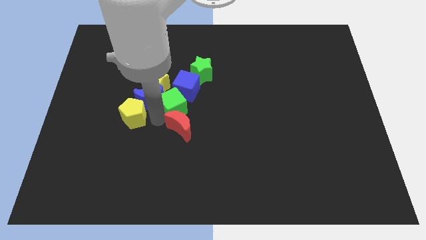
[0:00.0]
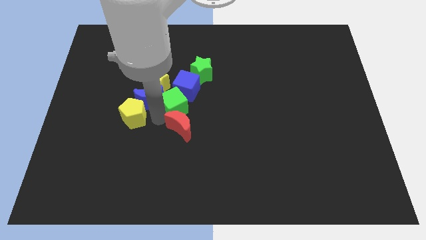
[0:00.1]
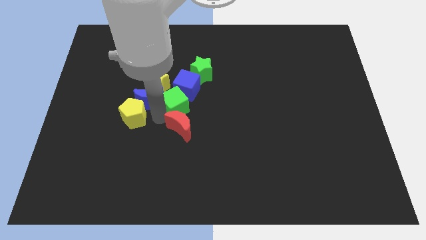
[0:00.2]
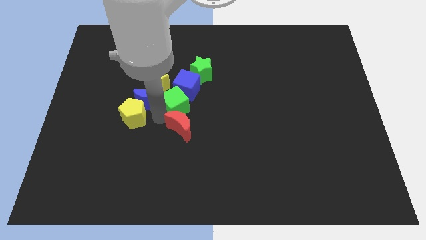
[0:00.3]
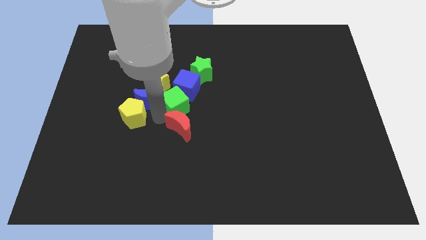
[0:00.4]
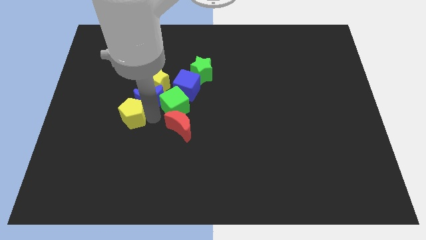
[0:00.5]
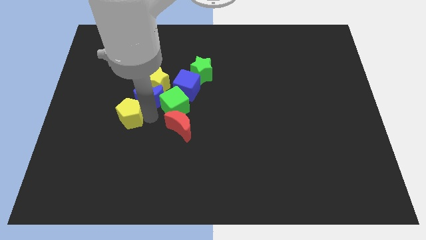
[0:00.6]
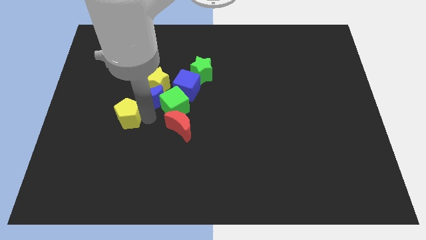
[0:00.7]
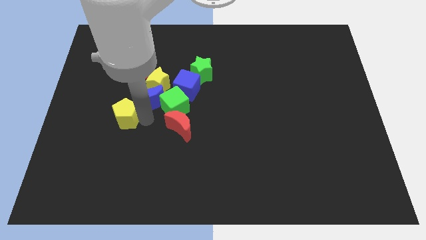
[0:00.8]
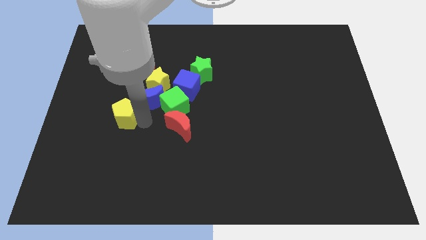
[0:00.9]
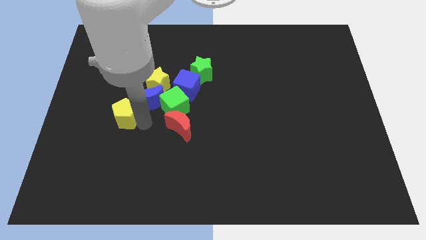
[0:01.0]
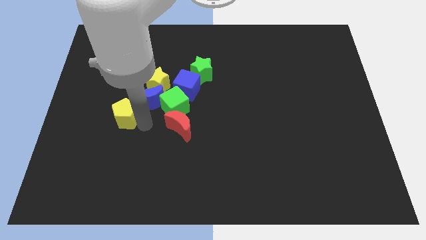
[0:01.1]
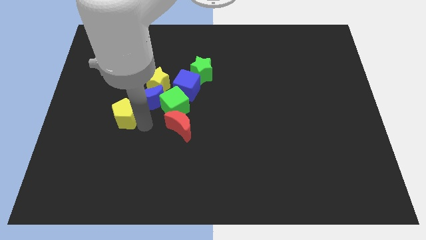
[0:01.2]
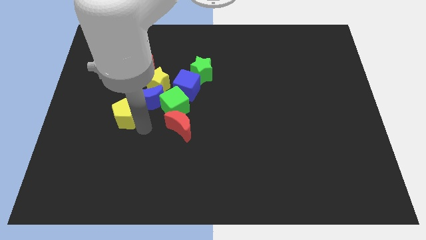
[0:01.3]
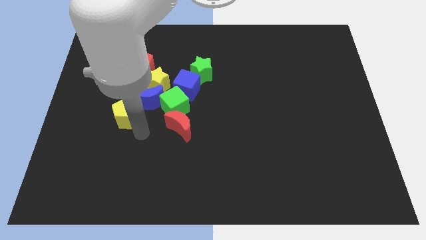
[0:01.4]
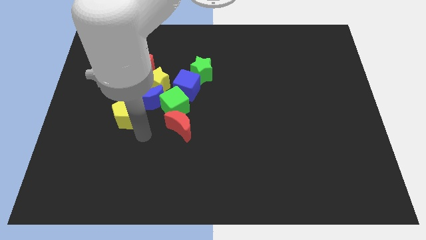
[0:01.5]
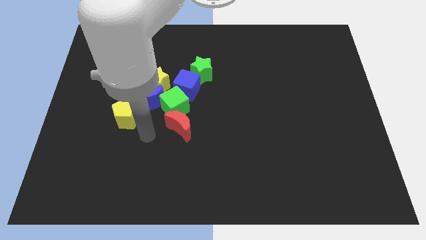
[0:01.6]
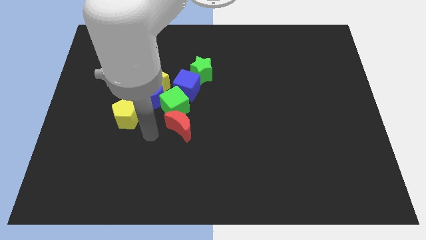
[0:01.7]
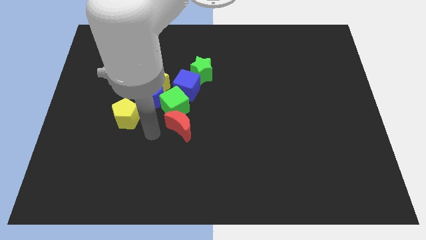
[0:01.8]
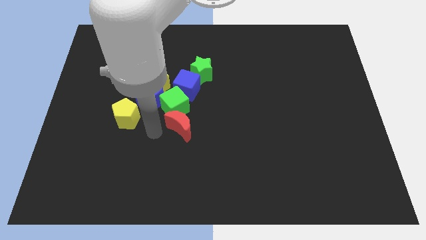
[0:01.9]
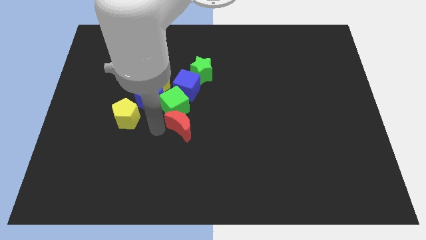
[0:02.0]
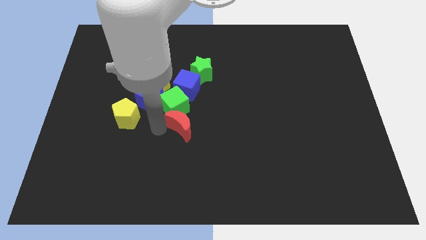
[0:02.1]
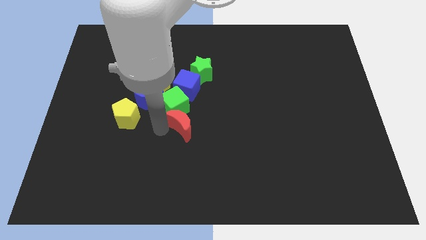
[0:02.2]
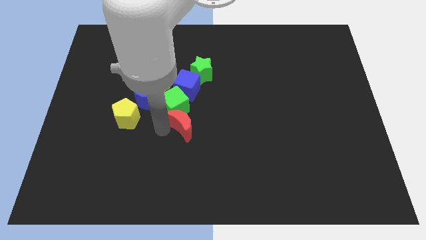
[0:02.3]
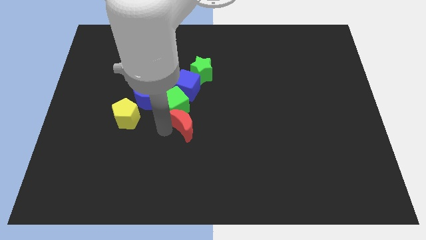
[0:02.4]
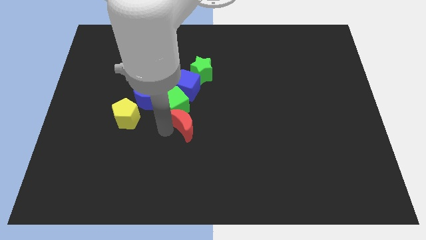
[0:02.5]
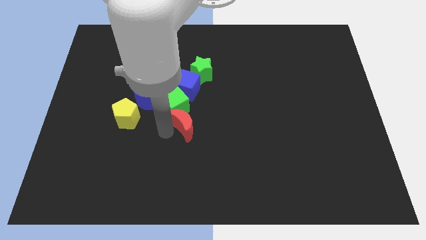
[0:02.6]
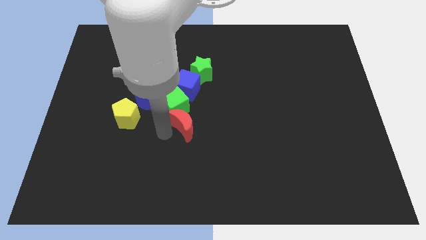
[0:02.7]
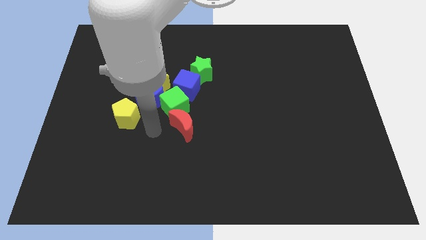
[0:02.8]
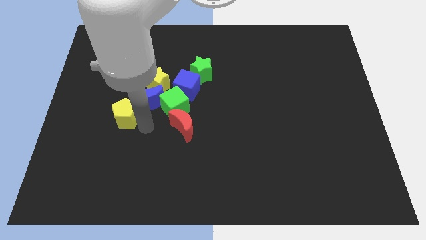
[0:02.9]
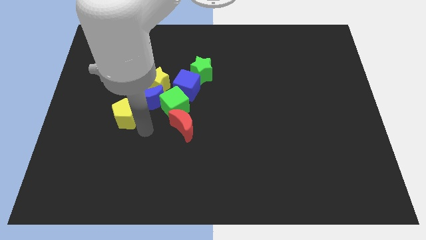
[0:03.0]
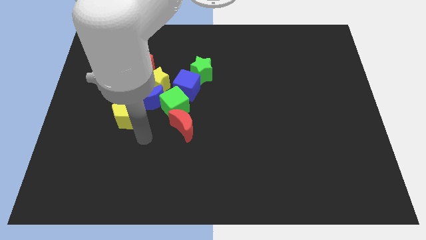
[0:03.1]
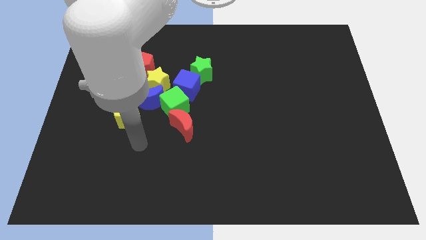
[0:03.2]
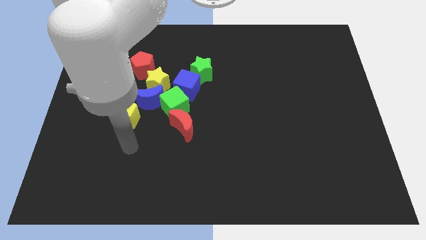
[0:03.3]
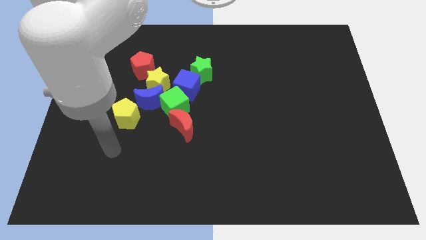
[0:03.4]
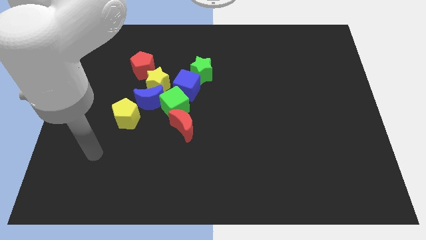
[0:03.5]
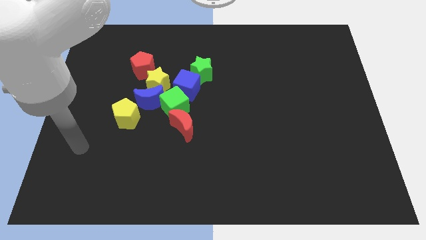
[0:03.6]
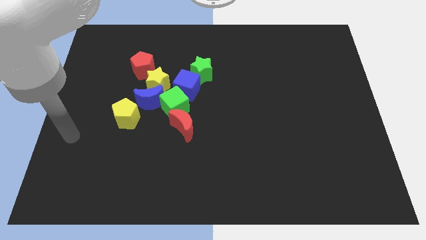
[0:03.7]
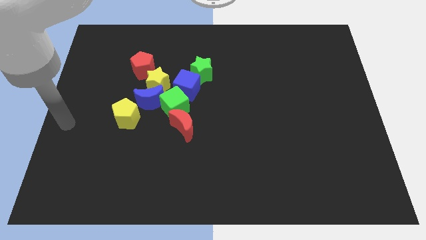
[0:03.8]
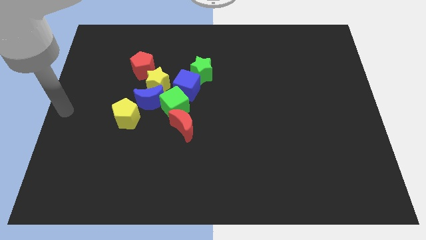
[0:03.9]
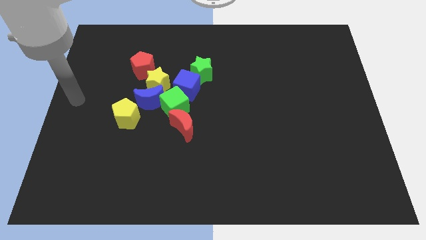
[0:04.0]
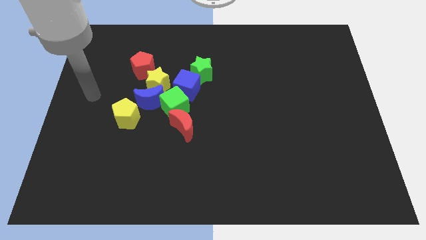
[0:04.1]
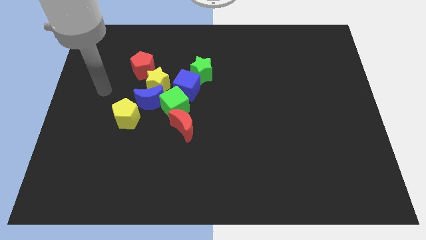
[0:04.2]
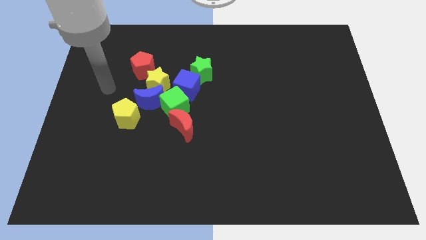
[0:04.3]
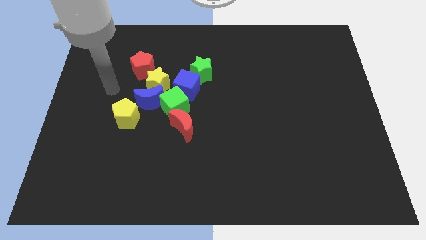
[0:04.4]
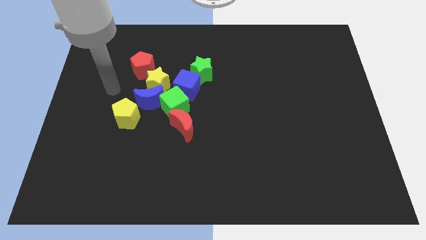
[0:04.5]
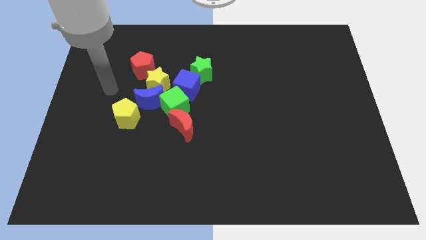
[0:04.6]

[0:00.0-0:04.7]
move yourself away from the green cube

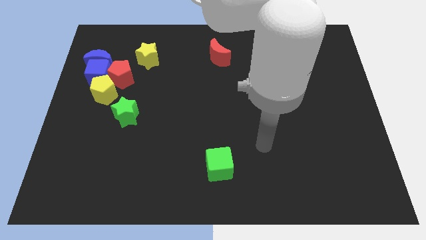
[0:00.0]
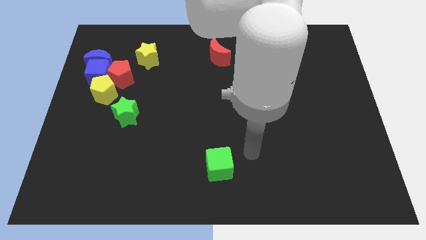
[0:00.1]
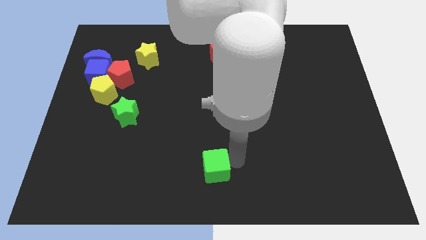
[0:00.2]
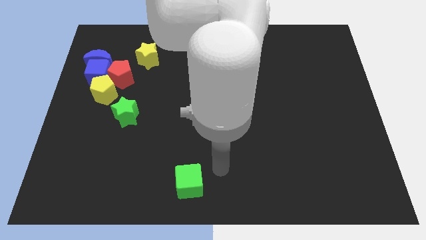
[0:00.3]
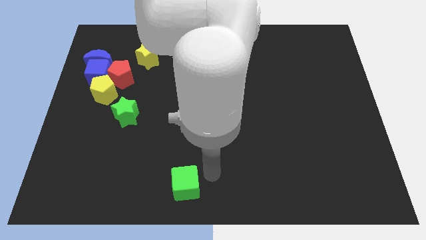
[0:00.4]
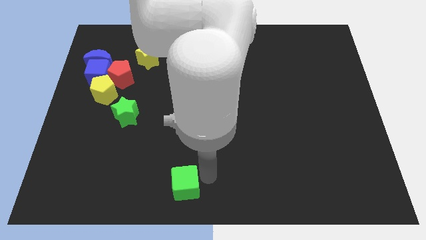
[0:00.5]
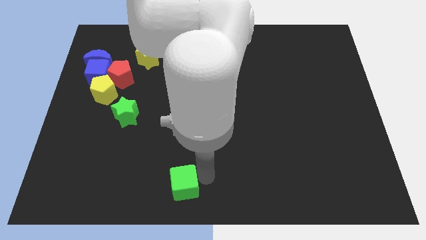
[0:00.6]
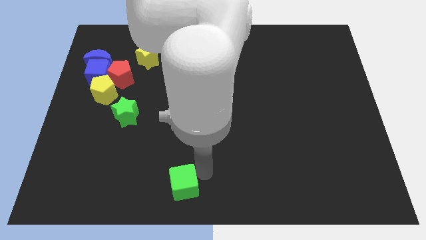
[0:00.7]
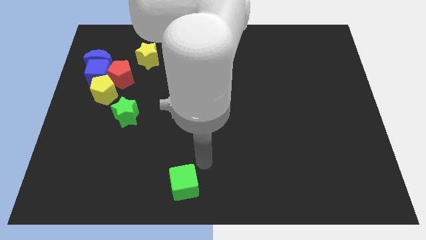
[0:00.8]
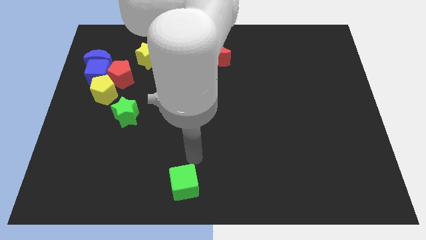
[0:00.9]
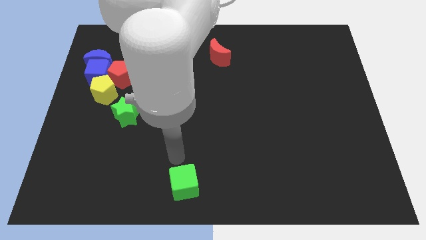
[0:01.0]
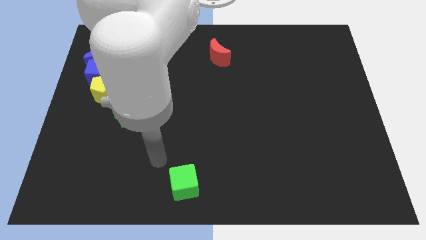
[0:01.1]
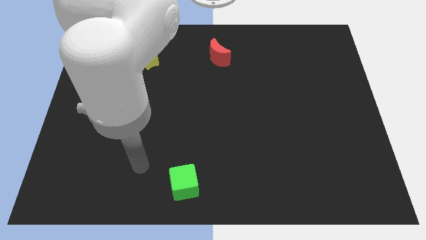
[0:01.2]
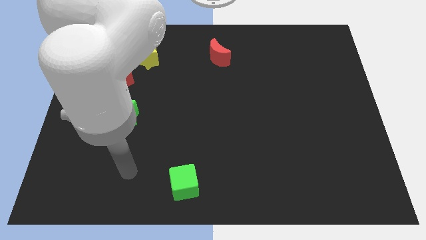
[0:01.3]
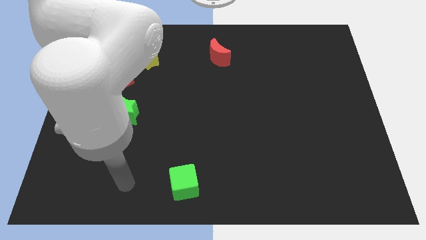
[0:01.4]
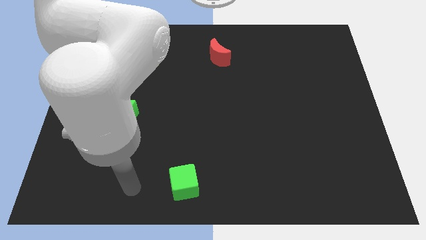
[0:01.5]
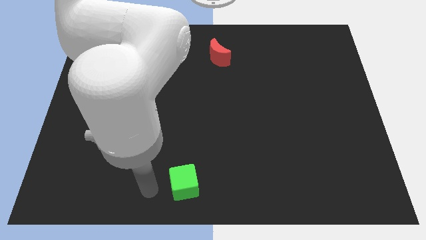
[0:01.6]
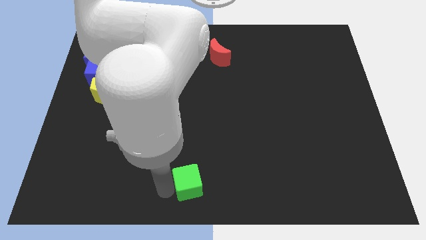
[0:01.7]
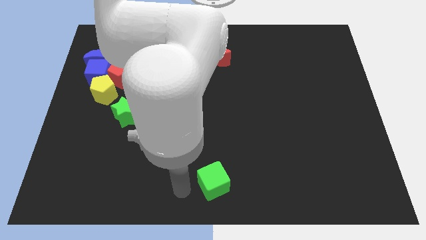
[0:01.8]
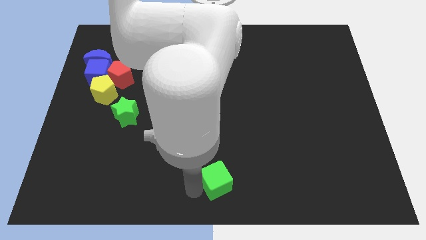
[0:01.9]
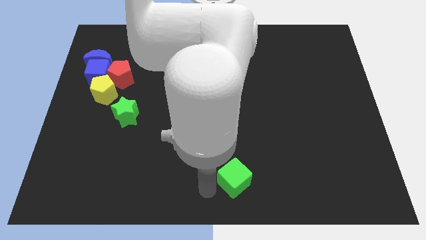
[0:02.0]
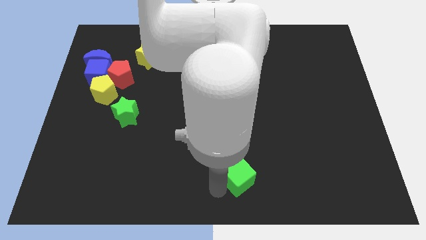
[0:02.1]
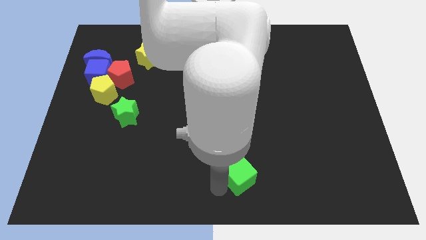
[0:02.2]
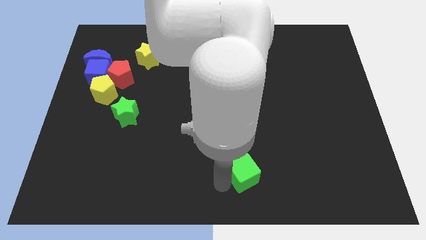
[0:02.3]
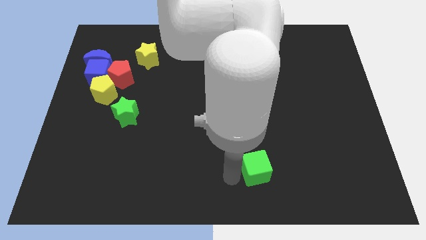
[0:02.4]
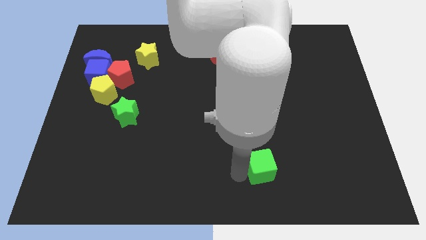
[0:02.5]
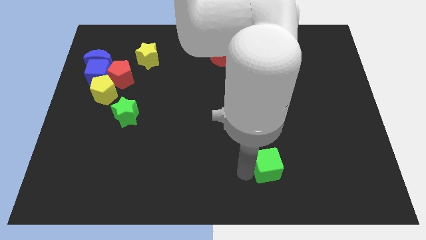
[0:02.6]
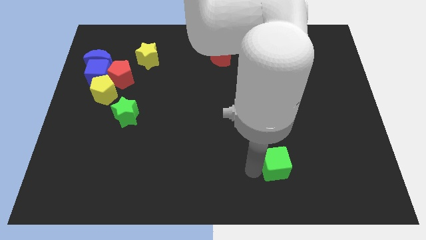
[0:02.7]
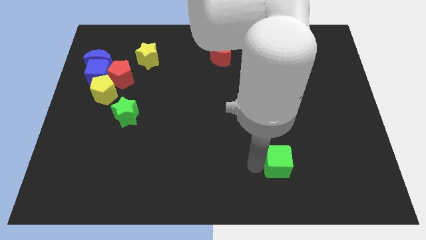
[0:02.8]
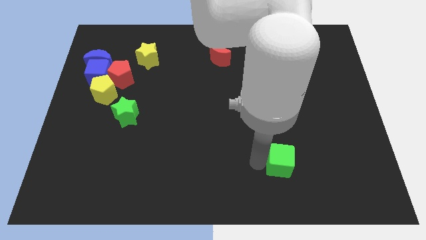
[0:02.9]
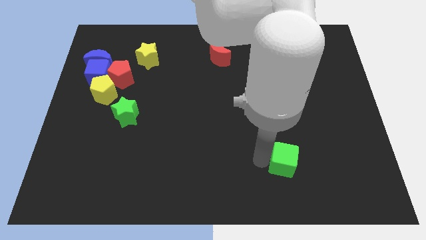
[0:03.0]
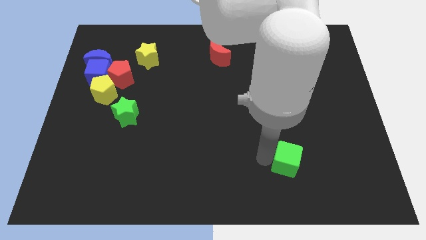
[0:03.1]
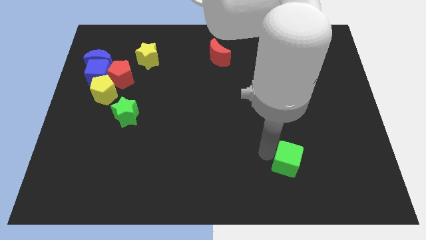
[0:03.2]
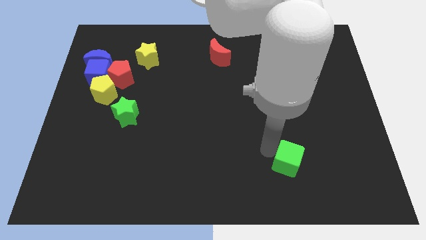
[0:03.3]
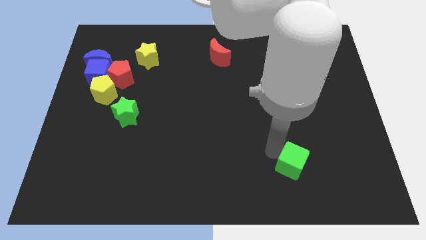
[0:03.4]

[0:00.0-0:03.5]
push green cube slightly towards right side

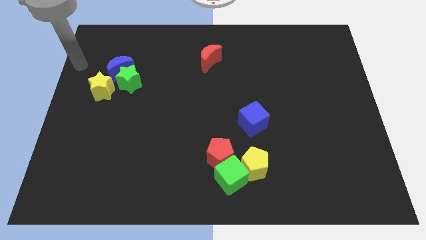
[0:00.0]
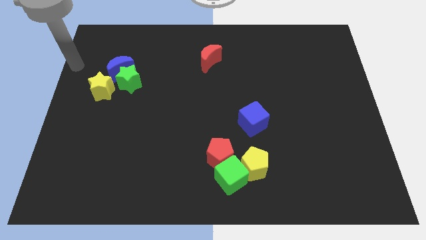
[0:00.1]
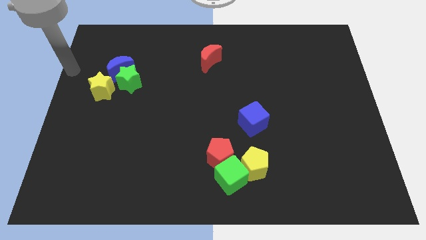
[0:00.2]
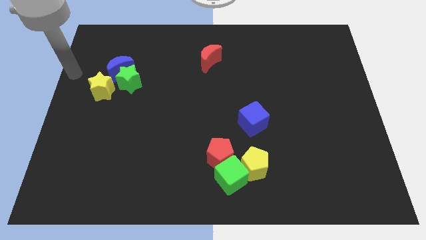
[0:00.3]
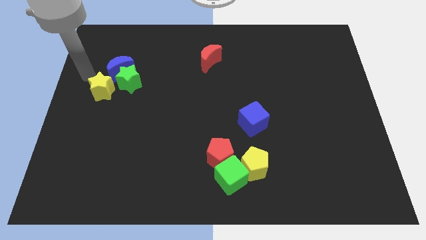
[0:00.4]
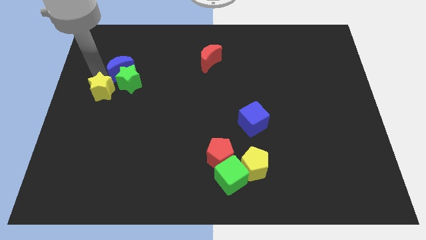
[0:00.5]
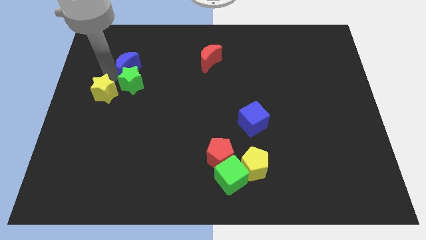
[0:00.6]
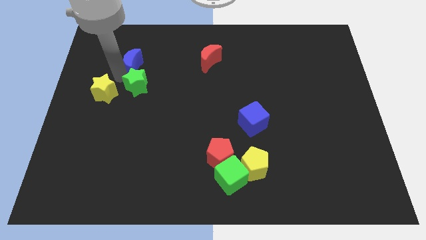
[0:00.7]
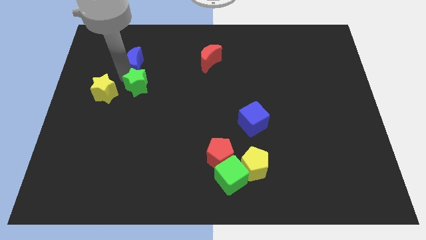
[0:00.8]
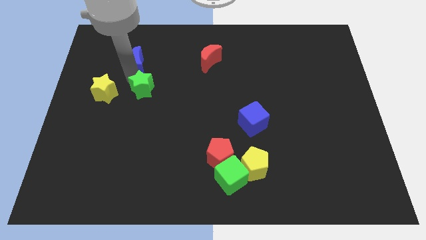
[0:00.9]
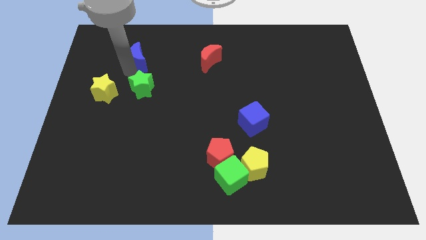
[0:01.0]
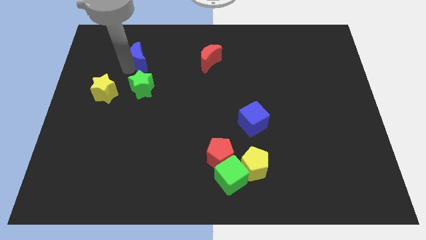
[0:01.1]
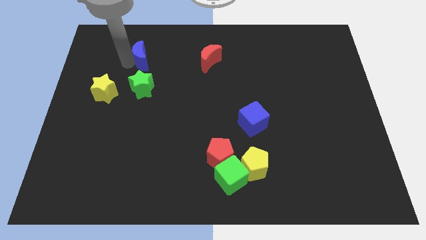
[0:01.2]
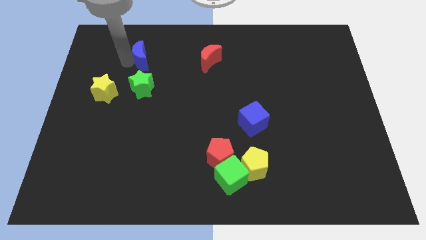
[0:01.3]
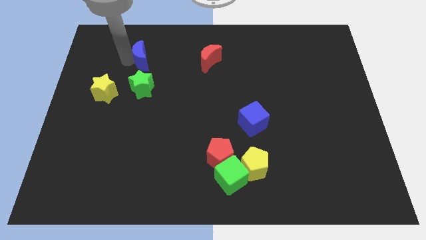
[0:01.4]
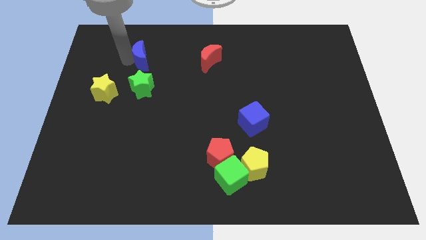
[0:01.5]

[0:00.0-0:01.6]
separate the blue moon and the green star
